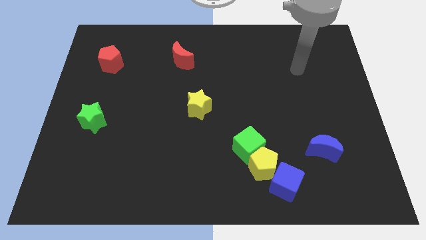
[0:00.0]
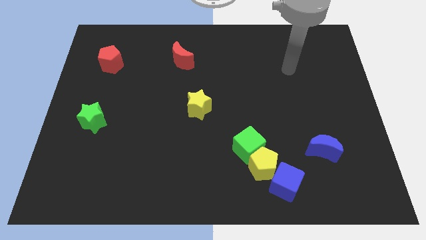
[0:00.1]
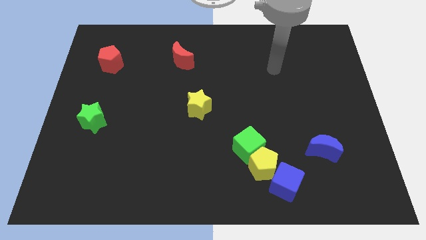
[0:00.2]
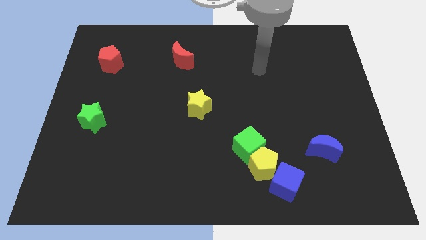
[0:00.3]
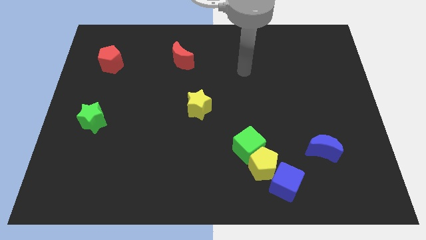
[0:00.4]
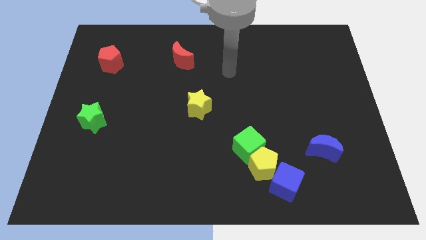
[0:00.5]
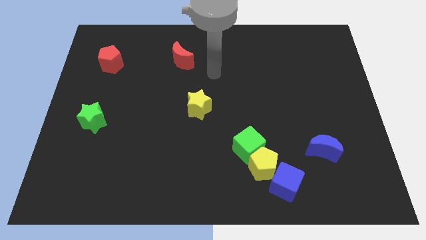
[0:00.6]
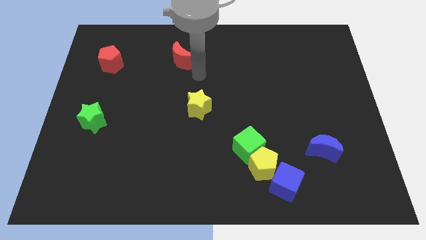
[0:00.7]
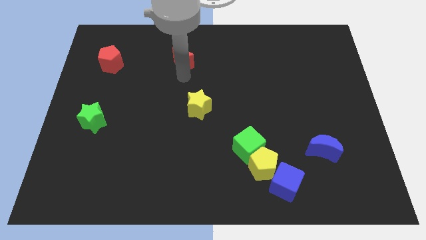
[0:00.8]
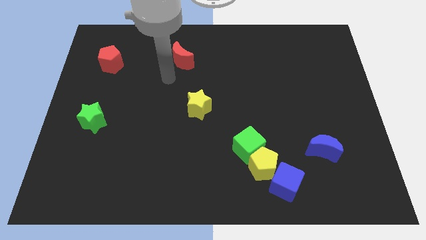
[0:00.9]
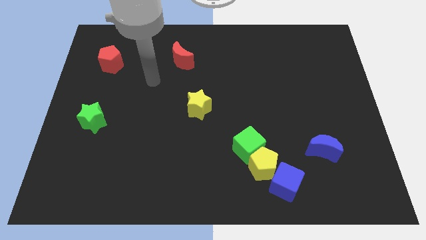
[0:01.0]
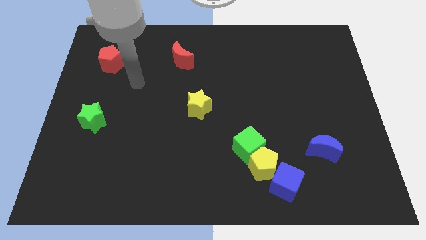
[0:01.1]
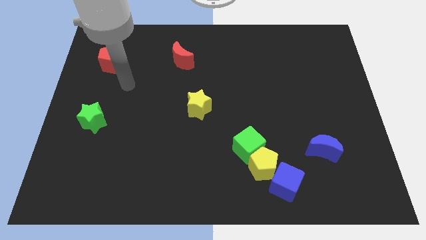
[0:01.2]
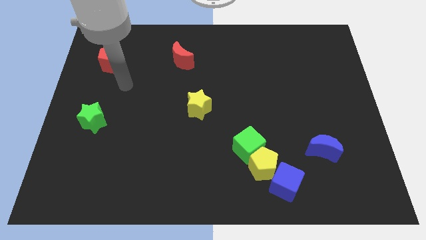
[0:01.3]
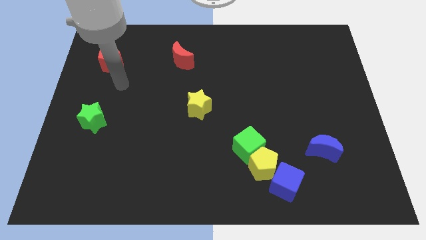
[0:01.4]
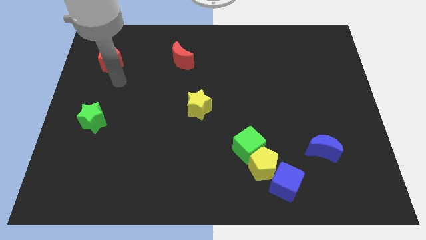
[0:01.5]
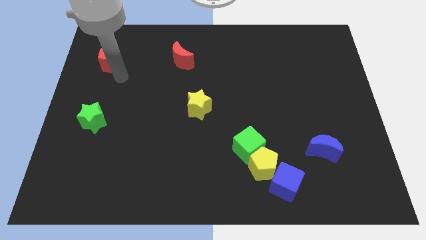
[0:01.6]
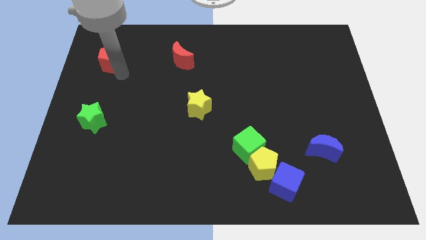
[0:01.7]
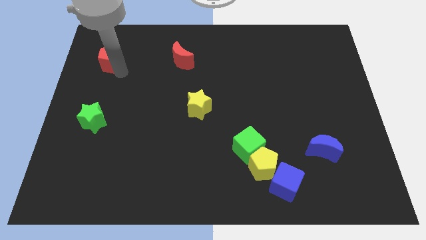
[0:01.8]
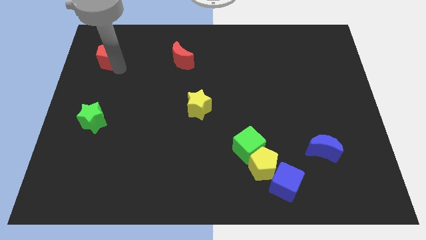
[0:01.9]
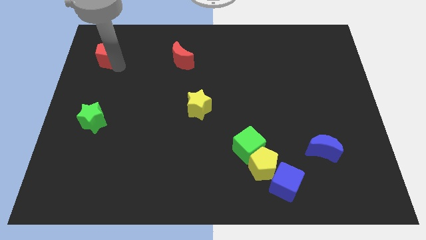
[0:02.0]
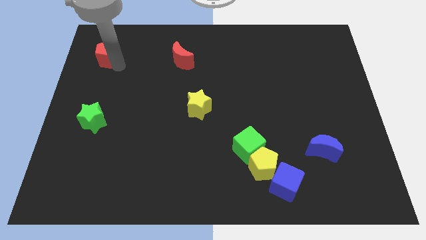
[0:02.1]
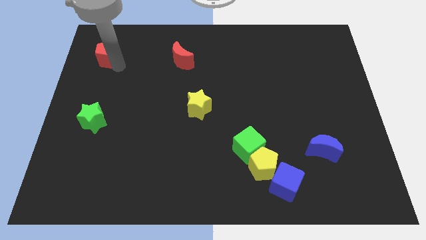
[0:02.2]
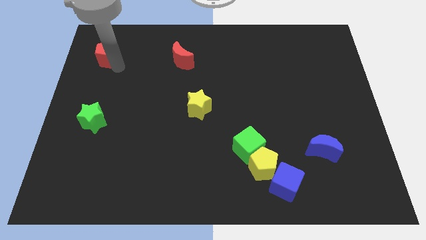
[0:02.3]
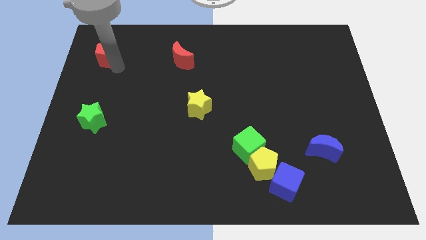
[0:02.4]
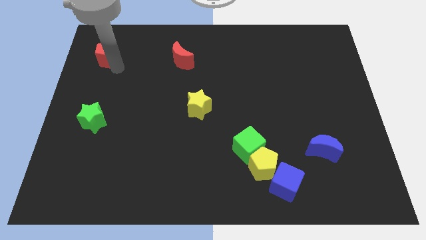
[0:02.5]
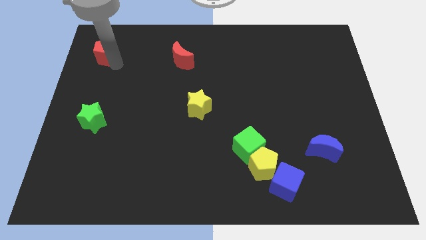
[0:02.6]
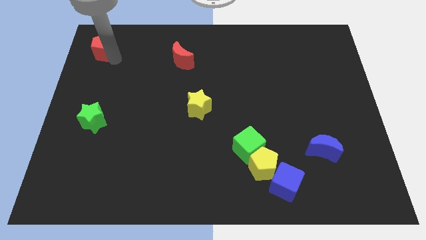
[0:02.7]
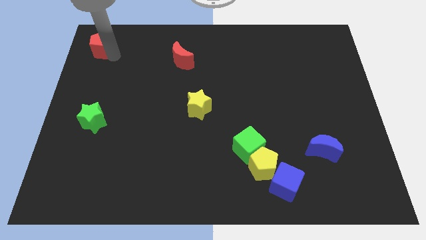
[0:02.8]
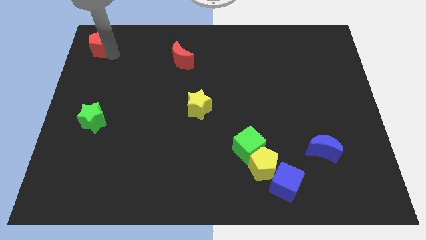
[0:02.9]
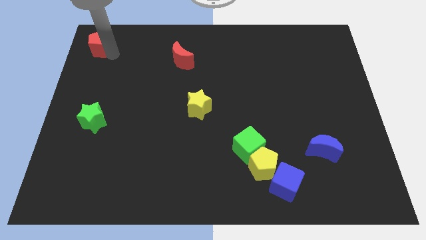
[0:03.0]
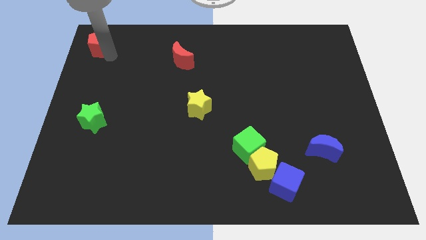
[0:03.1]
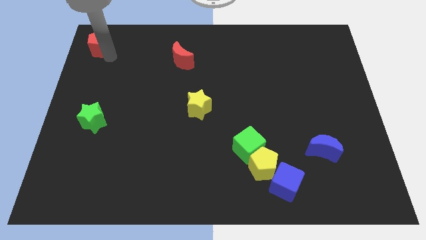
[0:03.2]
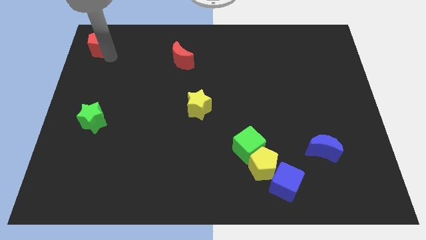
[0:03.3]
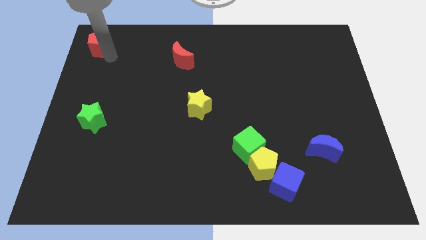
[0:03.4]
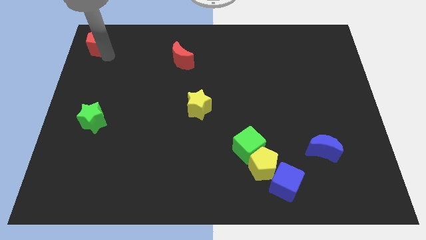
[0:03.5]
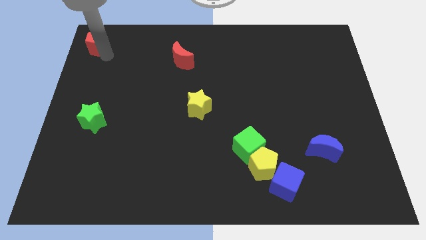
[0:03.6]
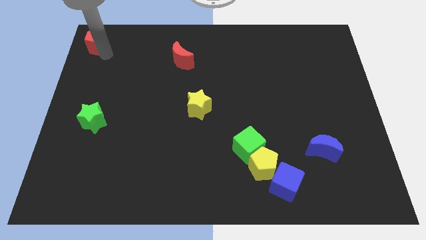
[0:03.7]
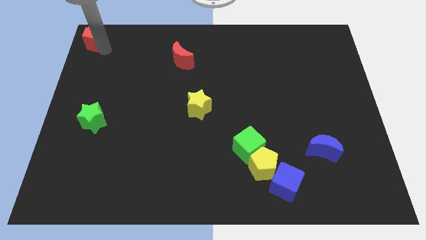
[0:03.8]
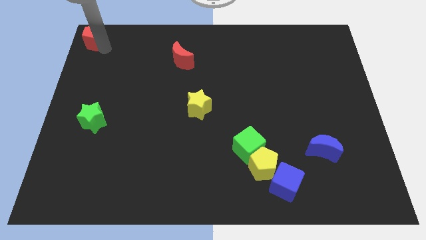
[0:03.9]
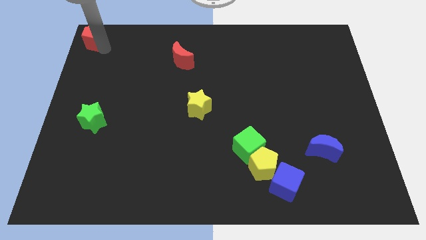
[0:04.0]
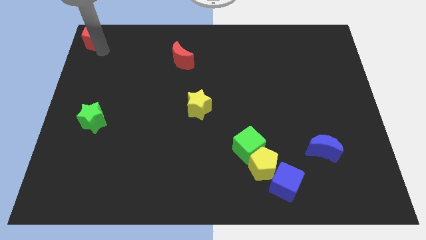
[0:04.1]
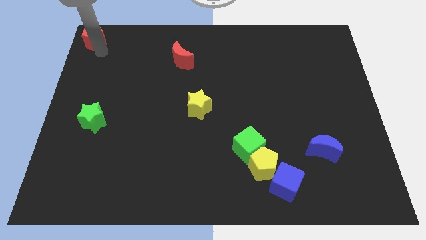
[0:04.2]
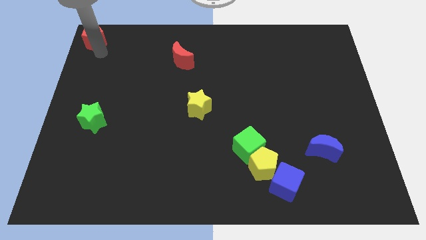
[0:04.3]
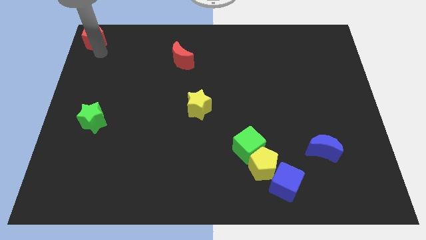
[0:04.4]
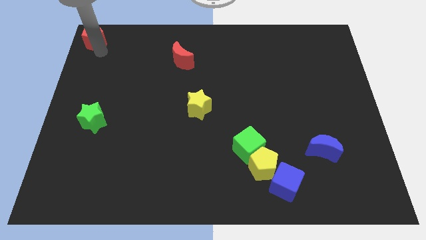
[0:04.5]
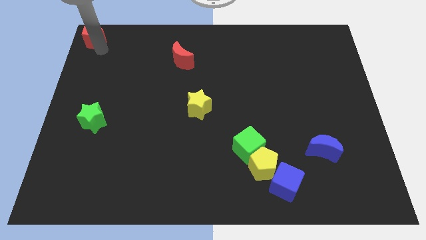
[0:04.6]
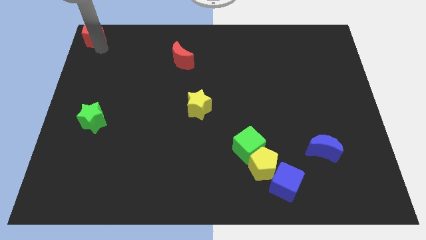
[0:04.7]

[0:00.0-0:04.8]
place the red pentagon at the top left corner of the board

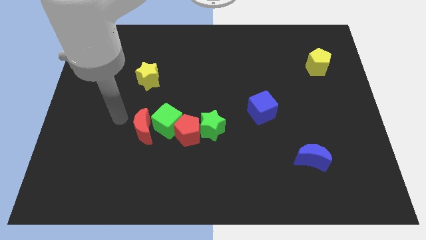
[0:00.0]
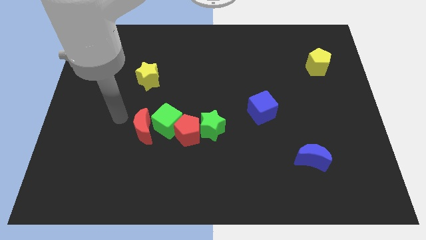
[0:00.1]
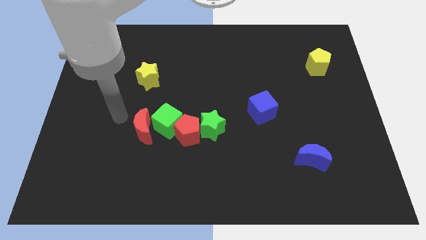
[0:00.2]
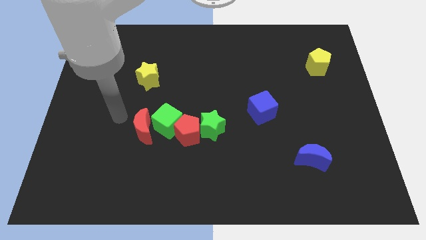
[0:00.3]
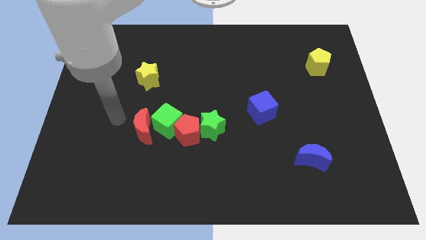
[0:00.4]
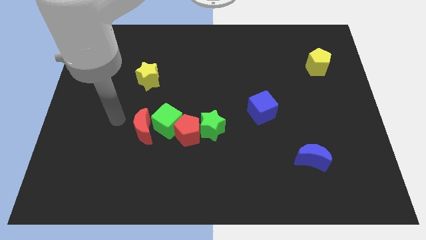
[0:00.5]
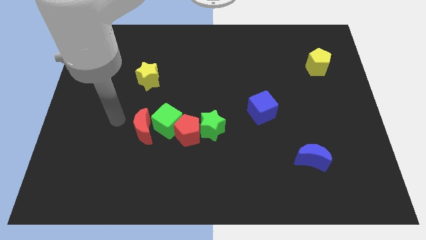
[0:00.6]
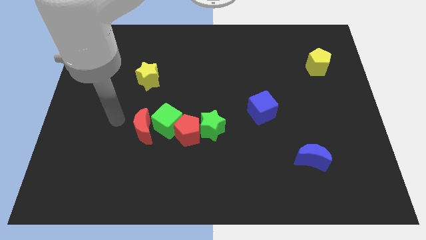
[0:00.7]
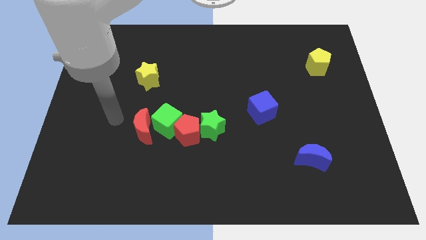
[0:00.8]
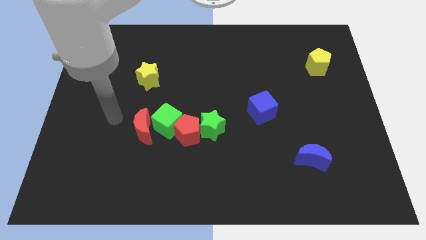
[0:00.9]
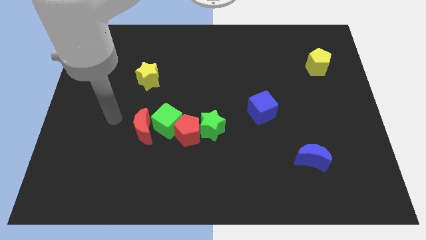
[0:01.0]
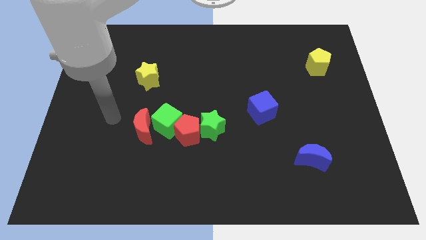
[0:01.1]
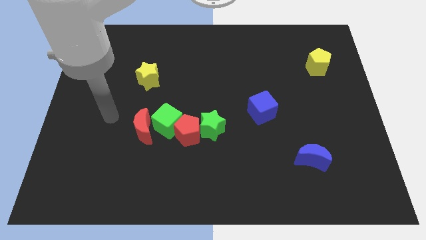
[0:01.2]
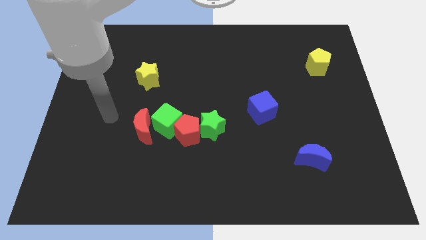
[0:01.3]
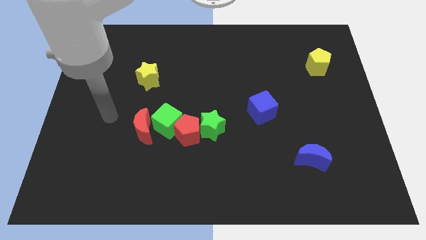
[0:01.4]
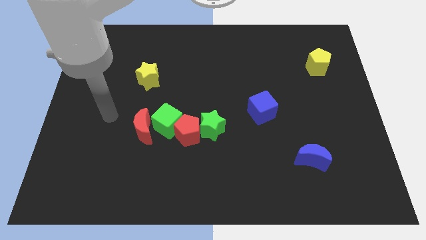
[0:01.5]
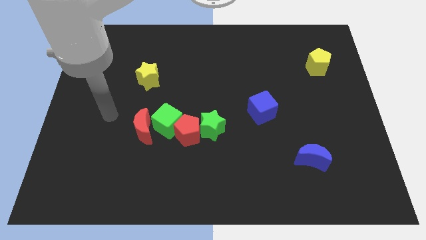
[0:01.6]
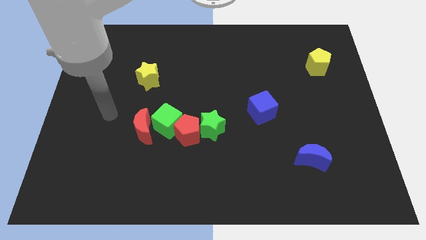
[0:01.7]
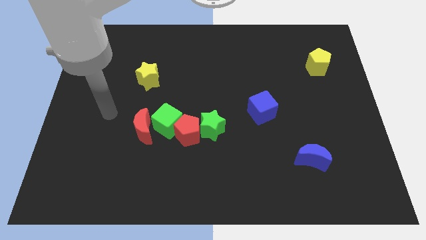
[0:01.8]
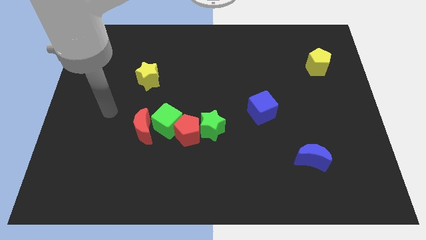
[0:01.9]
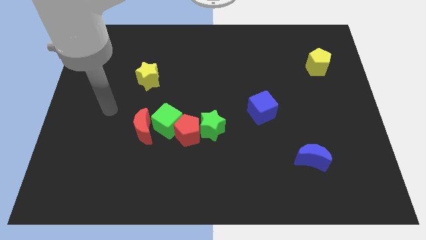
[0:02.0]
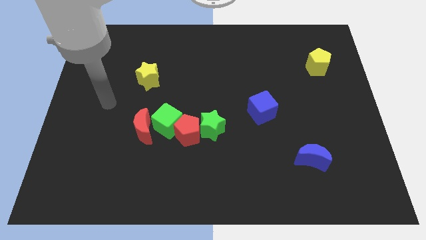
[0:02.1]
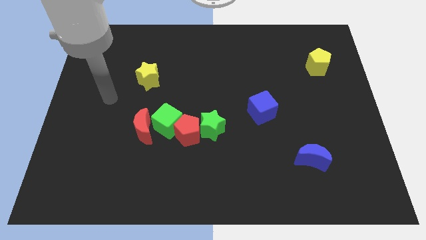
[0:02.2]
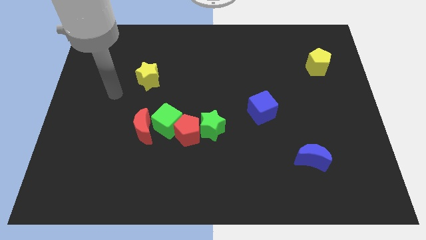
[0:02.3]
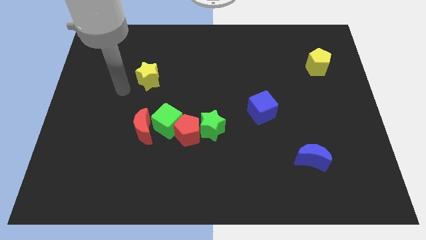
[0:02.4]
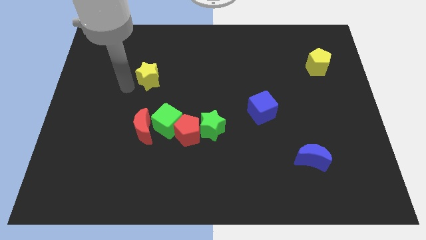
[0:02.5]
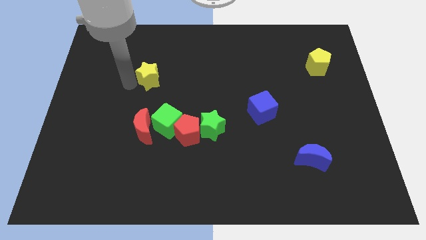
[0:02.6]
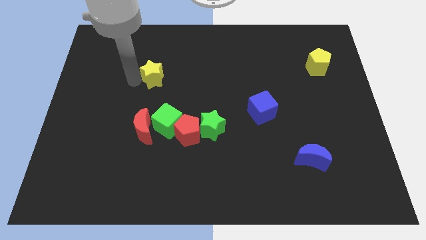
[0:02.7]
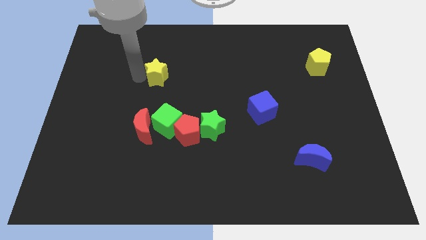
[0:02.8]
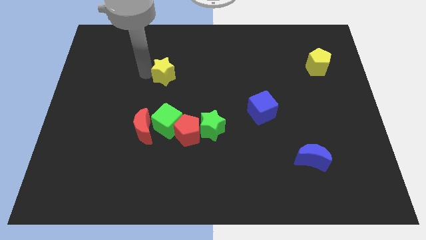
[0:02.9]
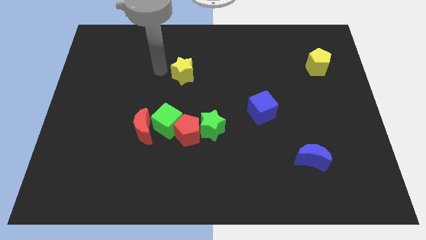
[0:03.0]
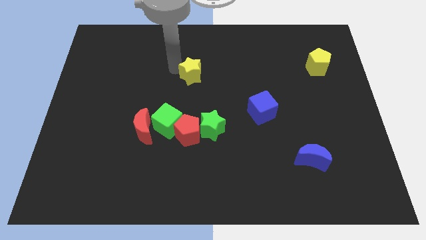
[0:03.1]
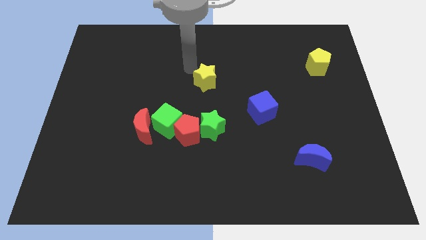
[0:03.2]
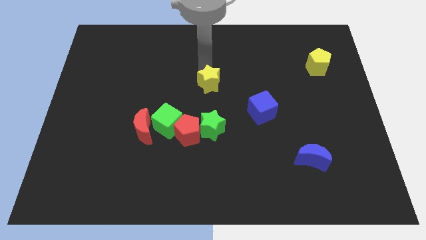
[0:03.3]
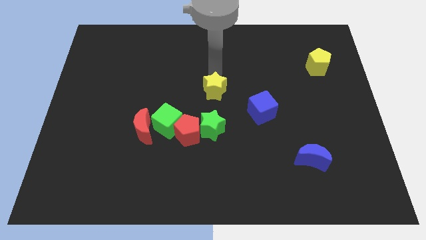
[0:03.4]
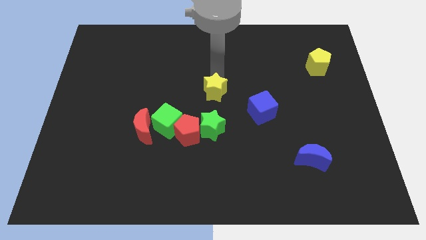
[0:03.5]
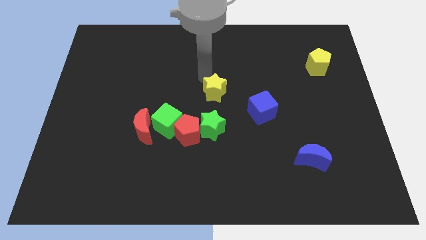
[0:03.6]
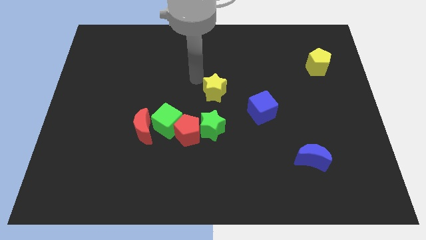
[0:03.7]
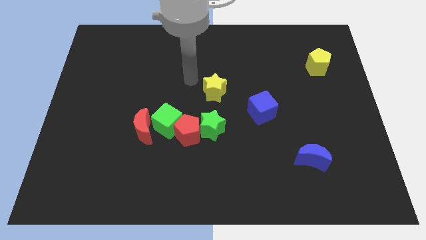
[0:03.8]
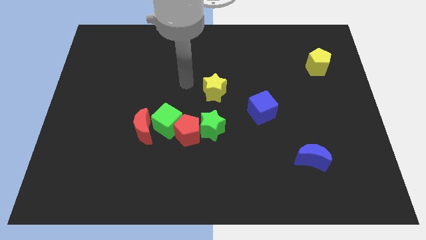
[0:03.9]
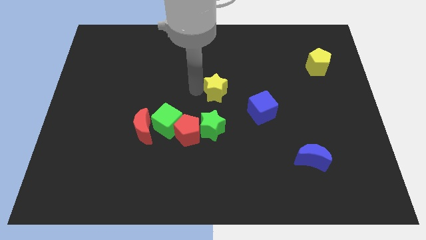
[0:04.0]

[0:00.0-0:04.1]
put the yellow star above the green star

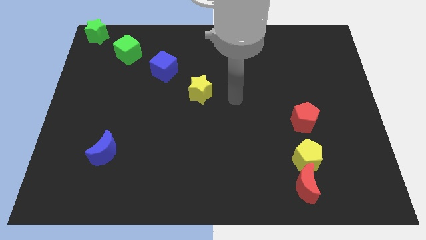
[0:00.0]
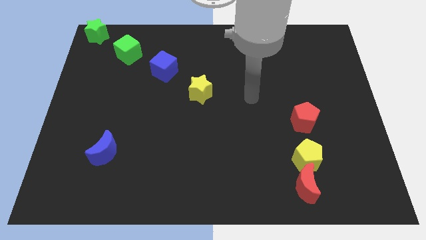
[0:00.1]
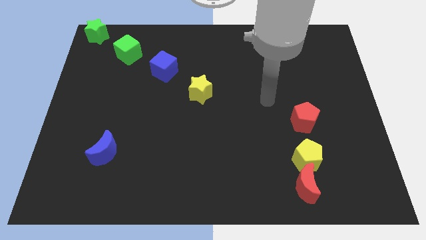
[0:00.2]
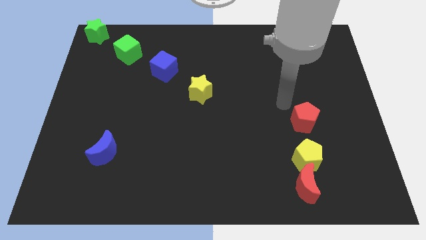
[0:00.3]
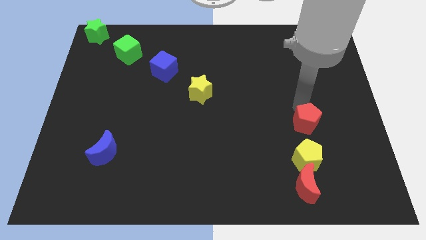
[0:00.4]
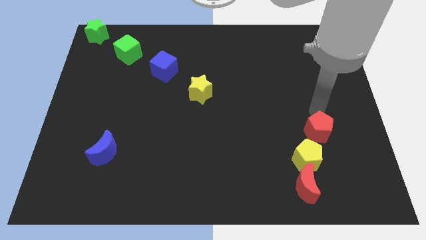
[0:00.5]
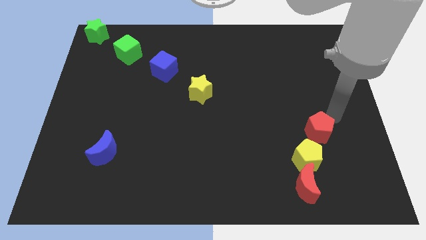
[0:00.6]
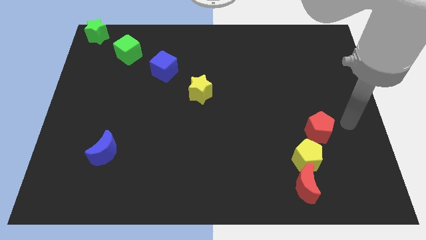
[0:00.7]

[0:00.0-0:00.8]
slightly push the red pentagon to the down
